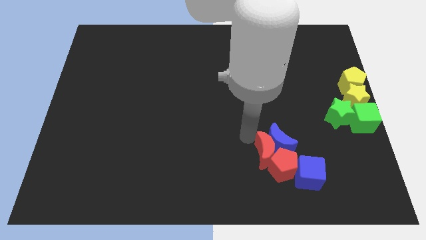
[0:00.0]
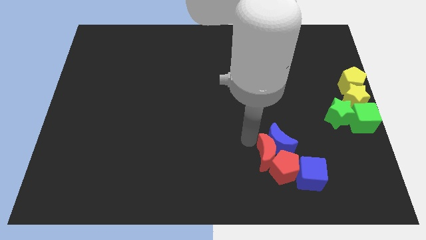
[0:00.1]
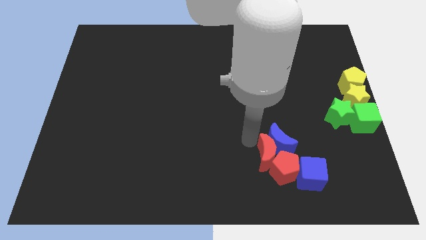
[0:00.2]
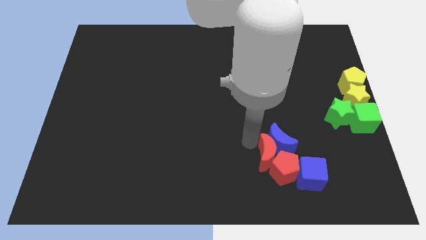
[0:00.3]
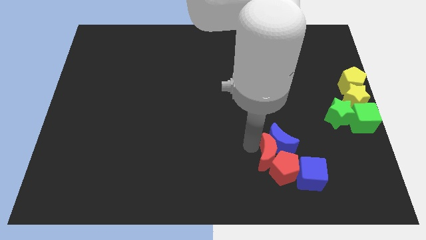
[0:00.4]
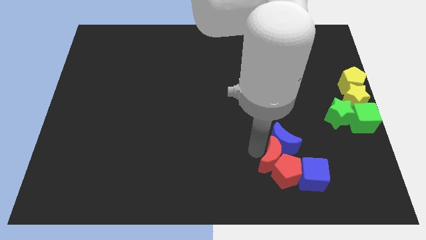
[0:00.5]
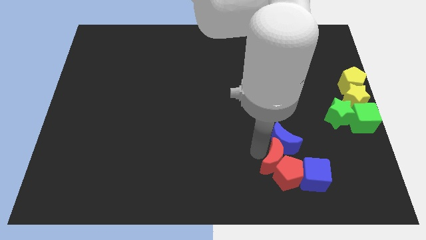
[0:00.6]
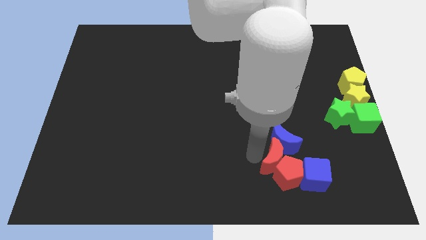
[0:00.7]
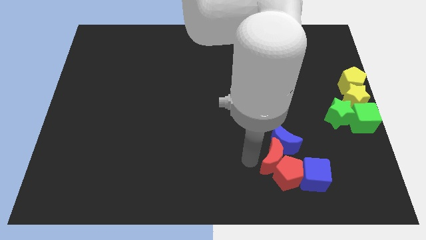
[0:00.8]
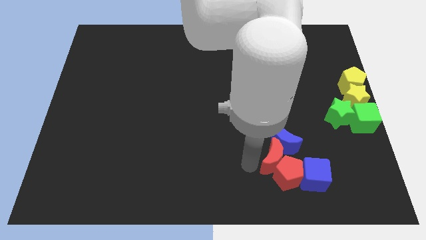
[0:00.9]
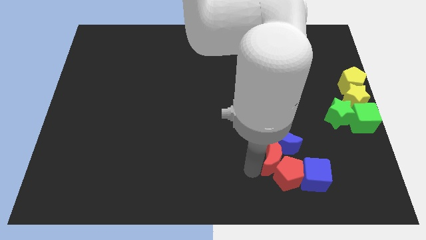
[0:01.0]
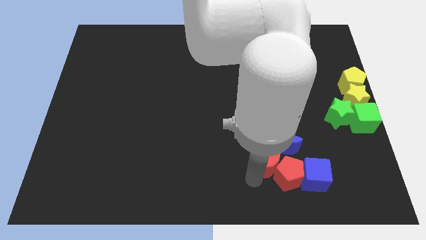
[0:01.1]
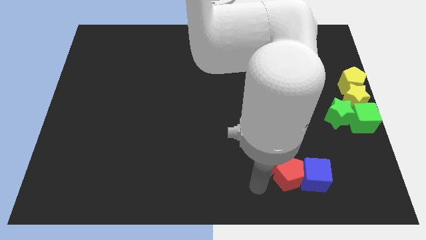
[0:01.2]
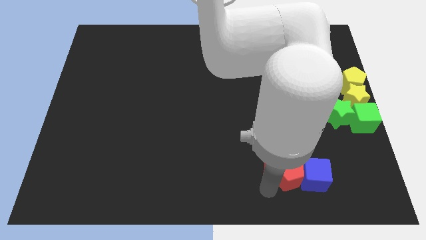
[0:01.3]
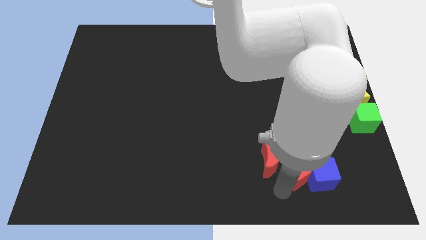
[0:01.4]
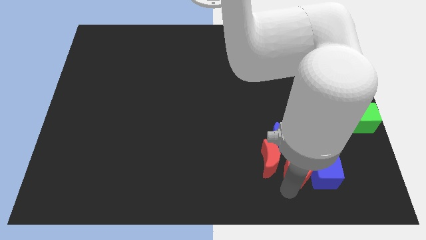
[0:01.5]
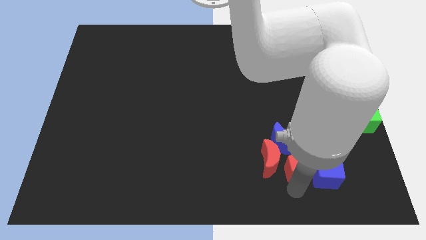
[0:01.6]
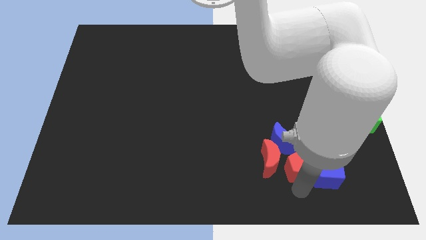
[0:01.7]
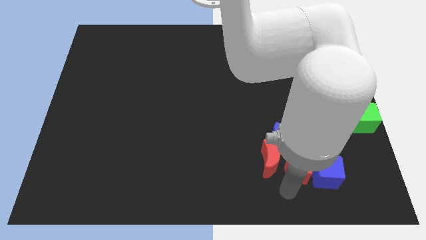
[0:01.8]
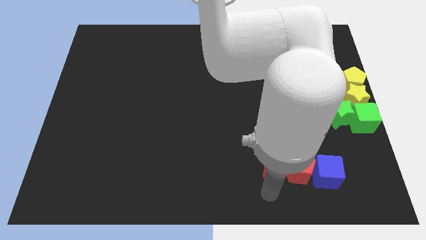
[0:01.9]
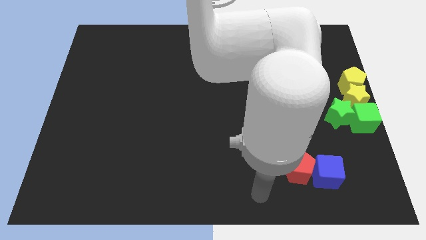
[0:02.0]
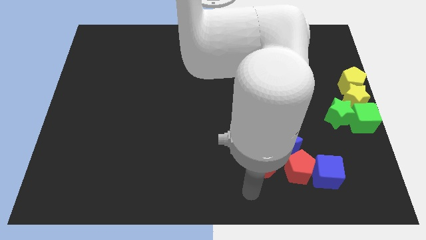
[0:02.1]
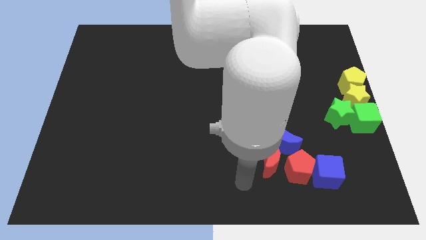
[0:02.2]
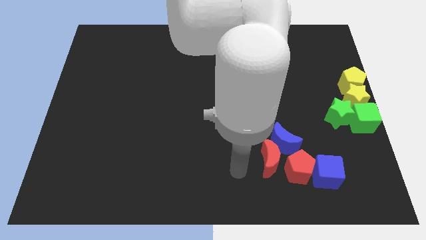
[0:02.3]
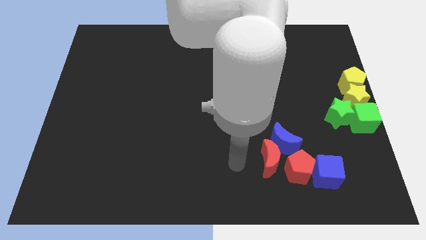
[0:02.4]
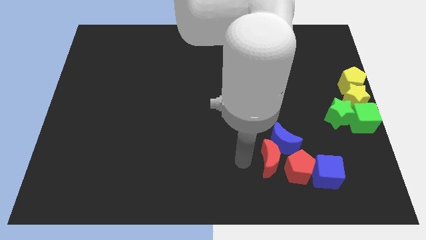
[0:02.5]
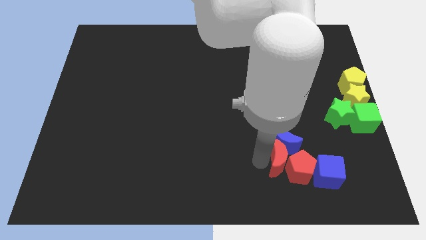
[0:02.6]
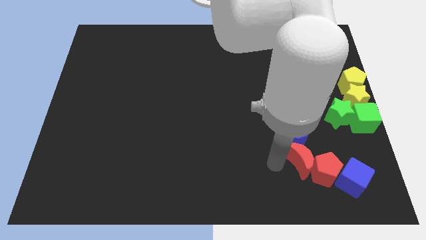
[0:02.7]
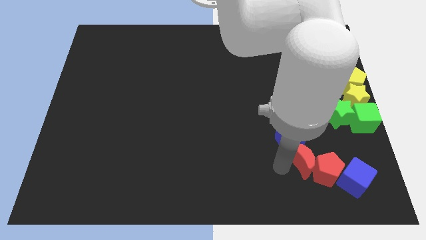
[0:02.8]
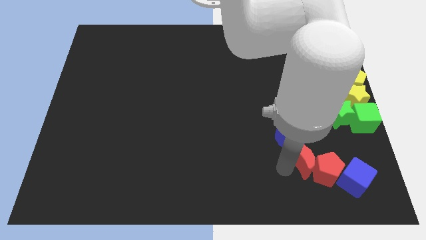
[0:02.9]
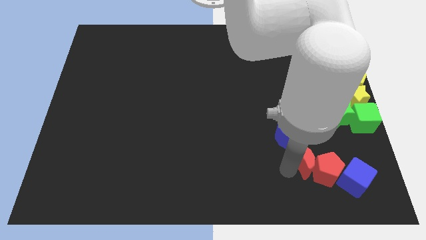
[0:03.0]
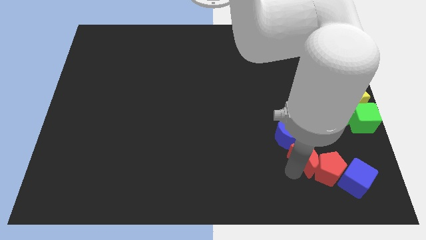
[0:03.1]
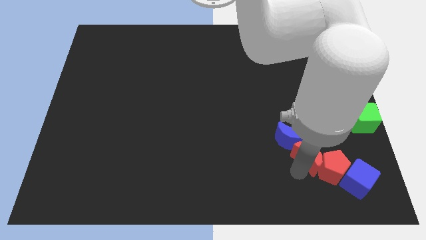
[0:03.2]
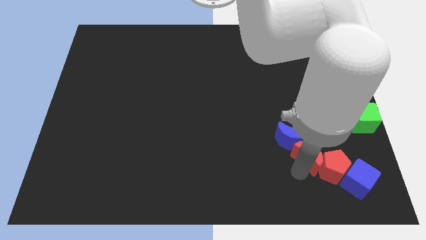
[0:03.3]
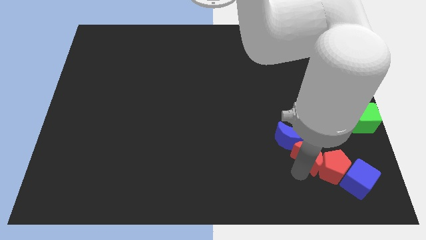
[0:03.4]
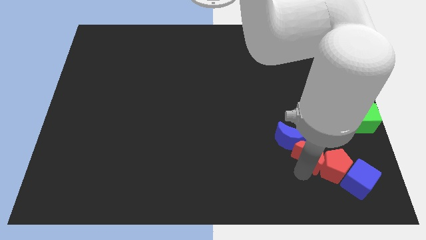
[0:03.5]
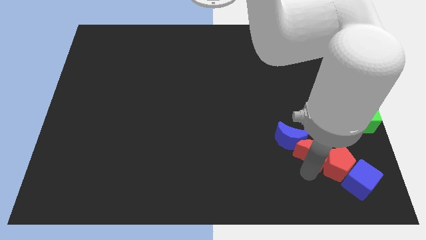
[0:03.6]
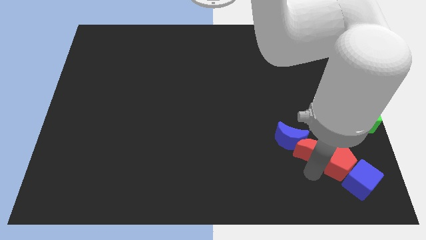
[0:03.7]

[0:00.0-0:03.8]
make a diagonal line with the blue moon red moon red pentagon and blue cube at the bottom right side of the board

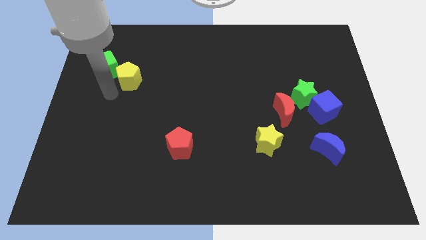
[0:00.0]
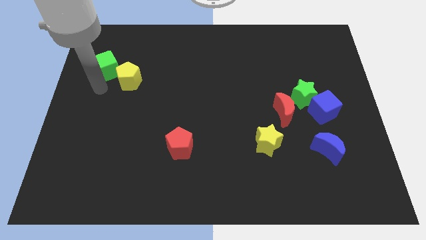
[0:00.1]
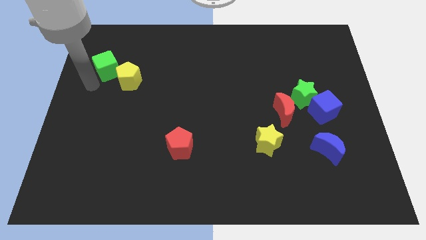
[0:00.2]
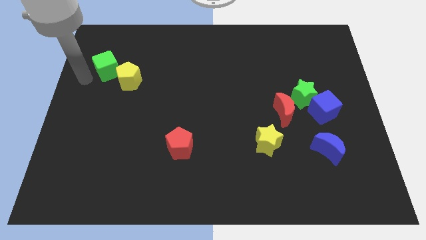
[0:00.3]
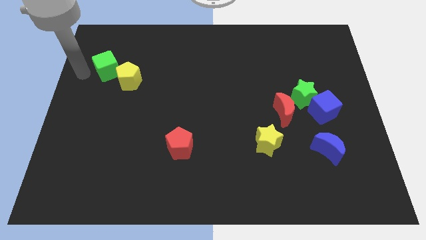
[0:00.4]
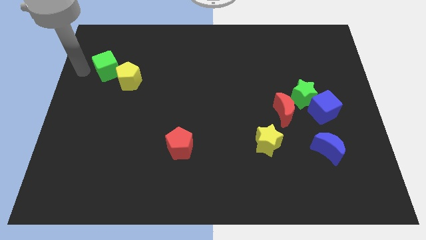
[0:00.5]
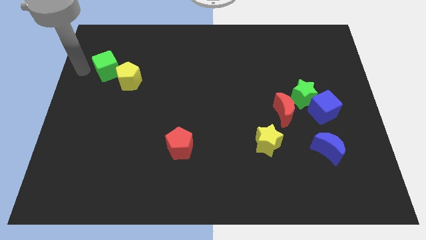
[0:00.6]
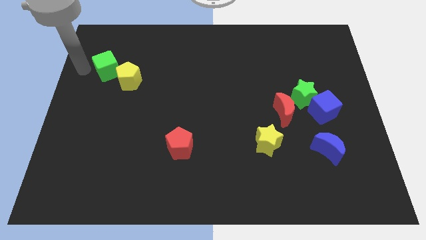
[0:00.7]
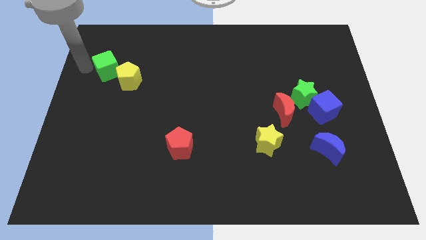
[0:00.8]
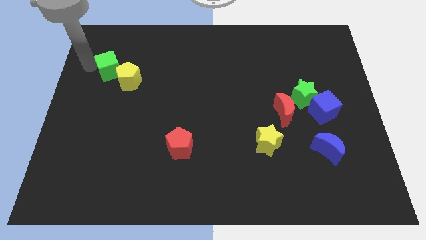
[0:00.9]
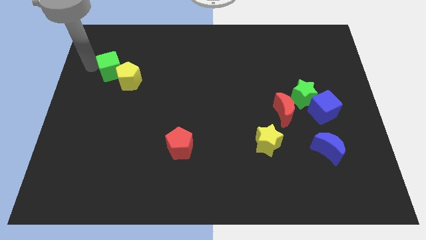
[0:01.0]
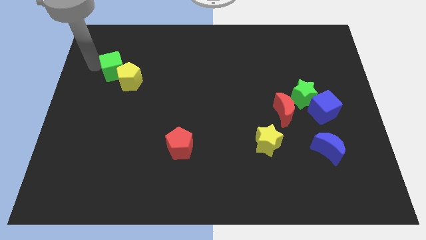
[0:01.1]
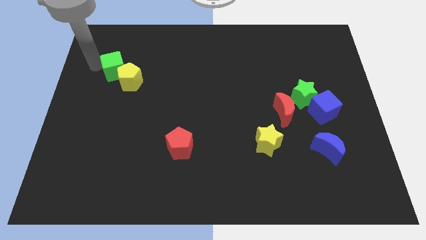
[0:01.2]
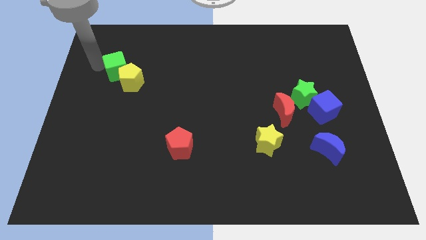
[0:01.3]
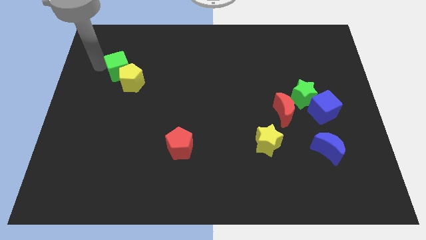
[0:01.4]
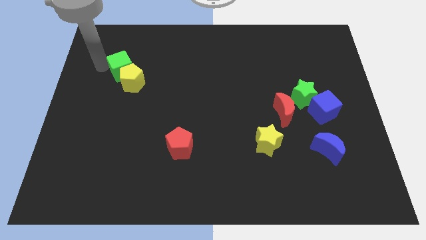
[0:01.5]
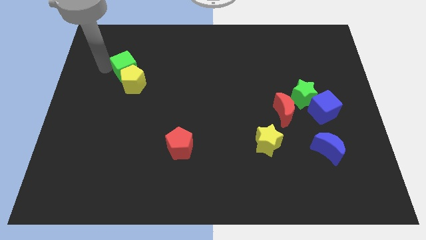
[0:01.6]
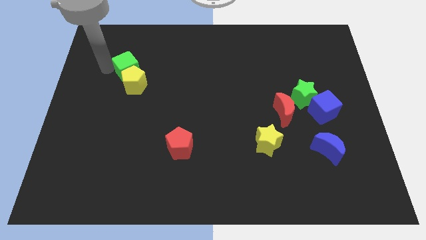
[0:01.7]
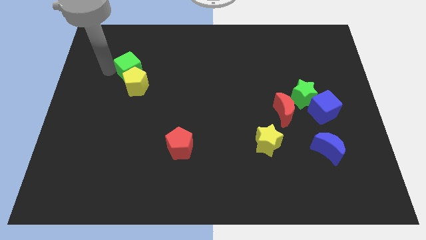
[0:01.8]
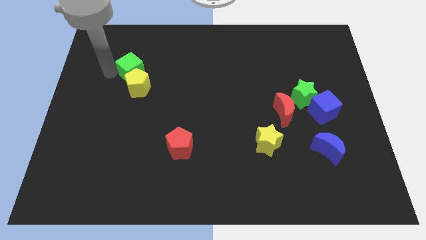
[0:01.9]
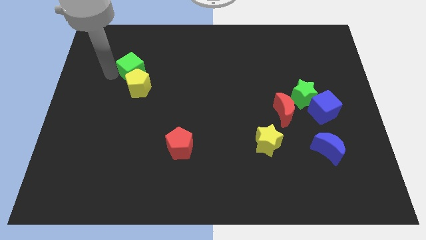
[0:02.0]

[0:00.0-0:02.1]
push the green cube above the yellow pentagon

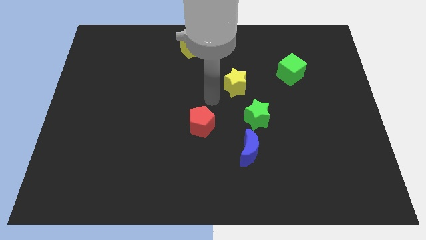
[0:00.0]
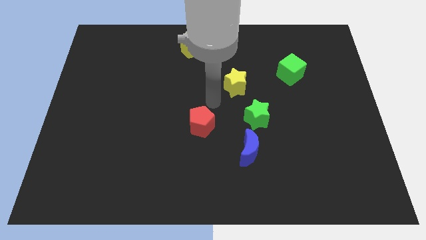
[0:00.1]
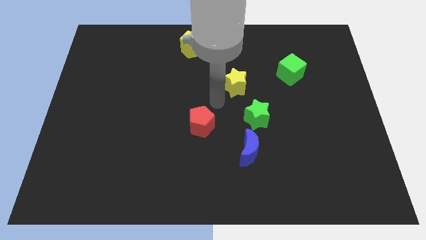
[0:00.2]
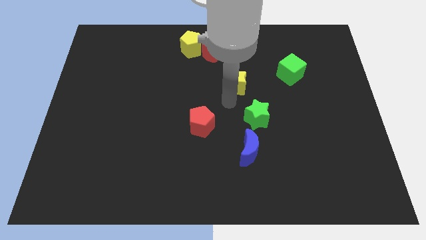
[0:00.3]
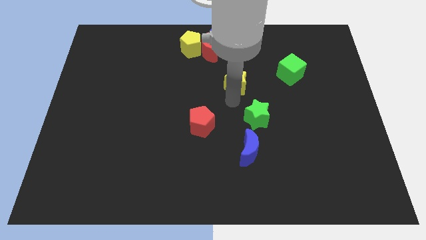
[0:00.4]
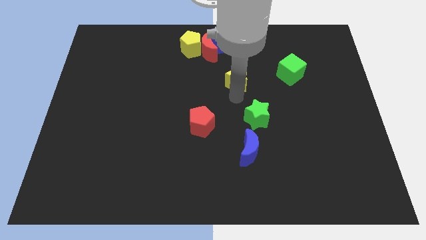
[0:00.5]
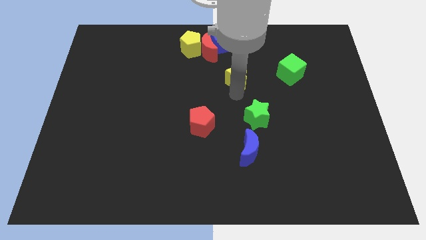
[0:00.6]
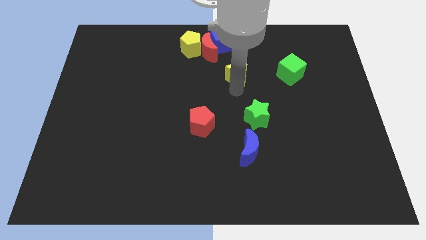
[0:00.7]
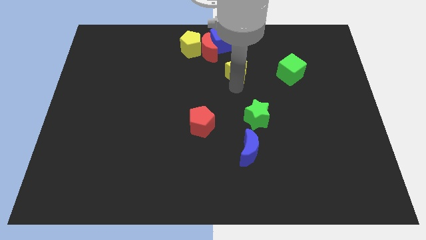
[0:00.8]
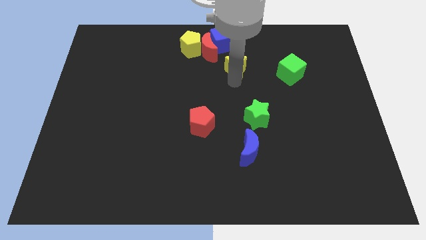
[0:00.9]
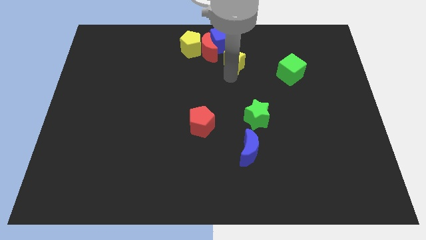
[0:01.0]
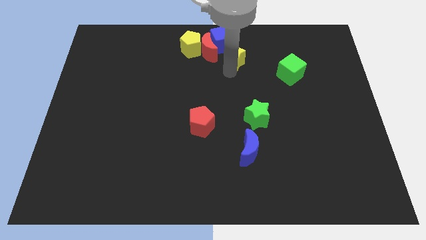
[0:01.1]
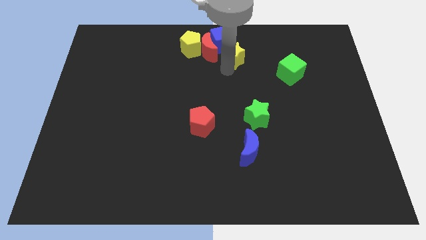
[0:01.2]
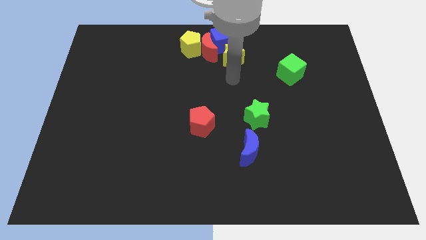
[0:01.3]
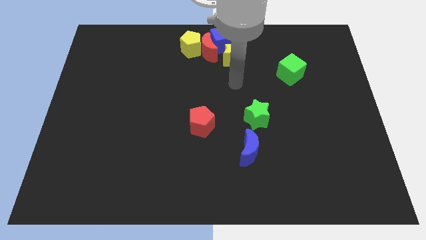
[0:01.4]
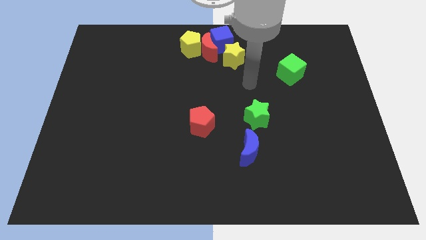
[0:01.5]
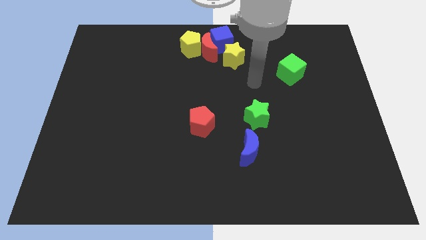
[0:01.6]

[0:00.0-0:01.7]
move the yellow star to the blue cube

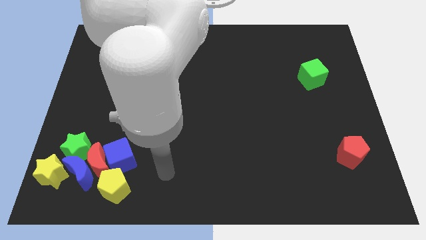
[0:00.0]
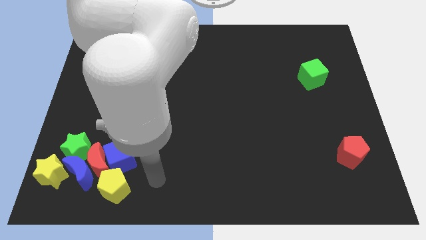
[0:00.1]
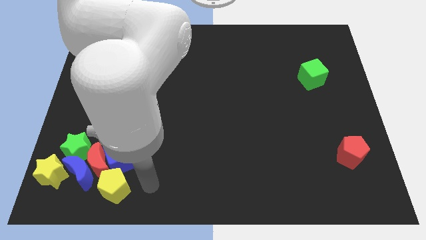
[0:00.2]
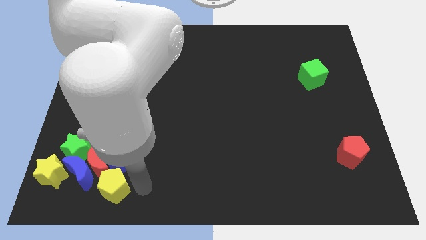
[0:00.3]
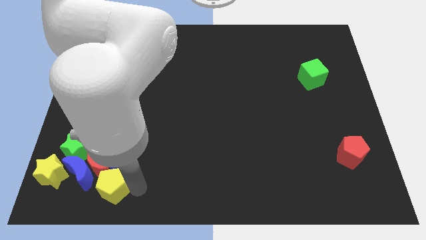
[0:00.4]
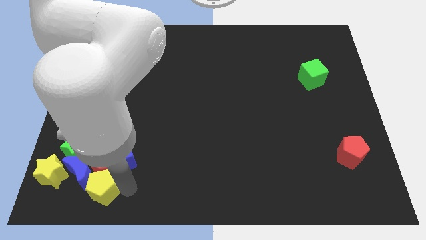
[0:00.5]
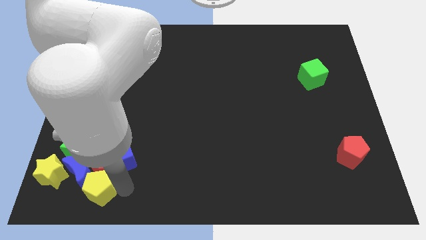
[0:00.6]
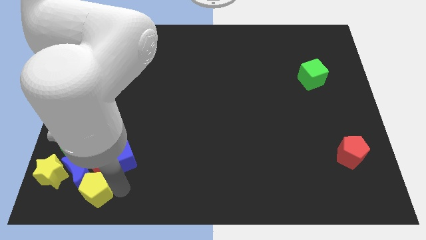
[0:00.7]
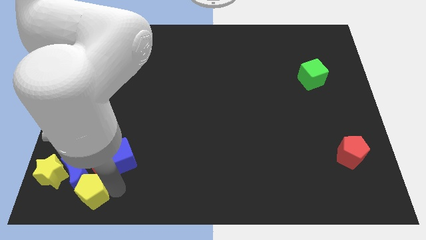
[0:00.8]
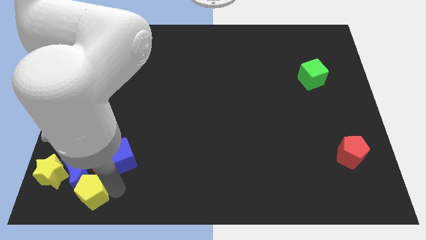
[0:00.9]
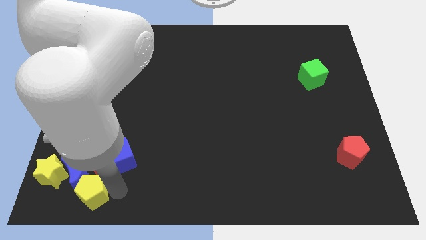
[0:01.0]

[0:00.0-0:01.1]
move yellow pentagon to blue moon

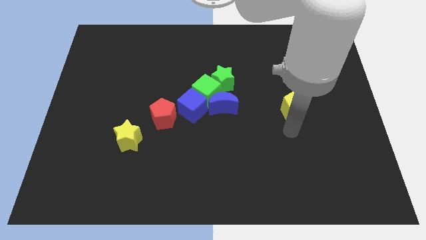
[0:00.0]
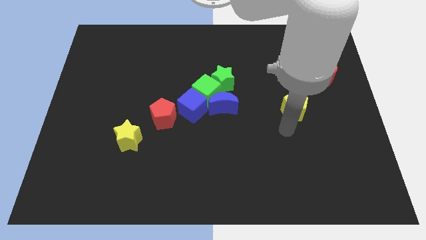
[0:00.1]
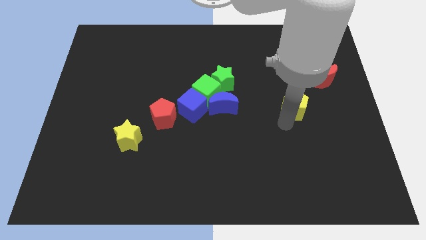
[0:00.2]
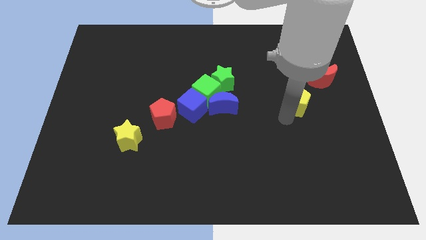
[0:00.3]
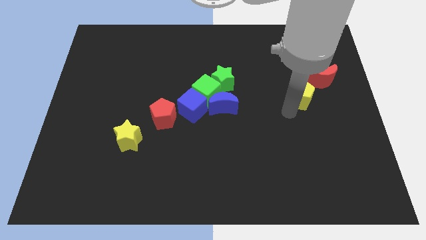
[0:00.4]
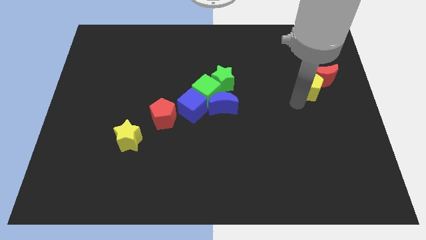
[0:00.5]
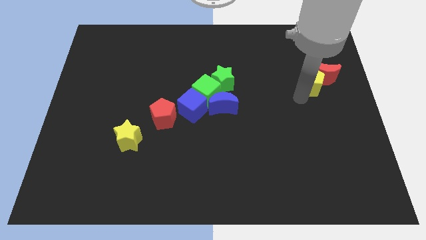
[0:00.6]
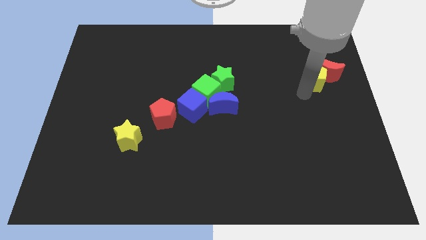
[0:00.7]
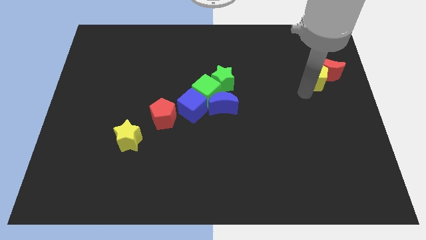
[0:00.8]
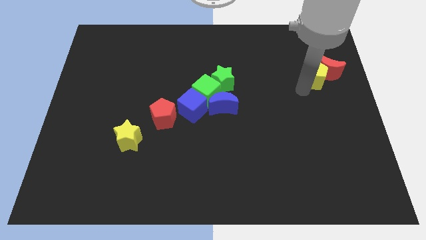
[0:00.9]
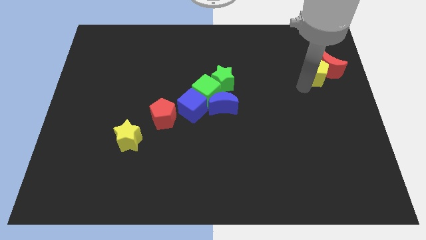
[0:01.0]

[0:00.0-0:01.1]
move the yellow pentagon into the red crescent
